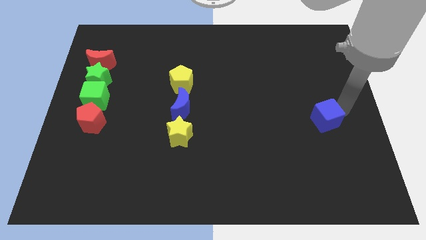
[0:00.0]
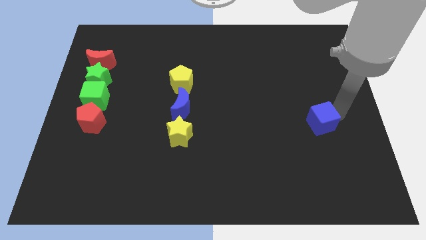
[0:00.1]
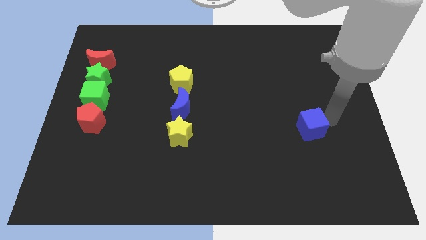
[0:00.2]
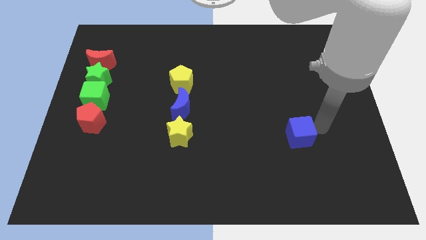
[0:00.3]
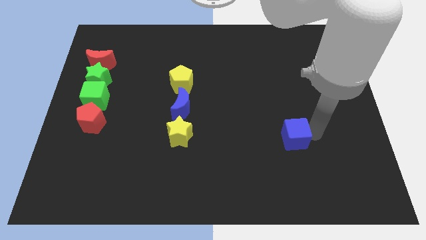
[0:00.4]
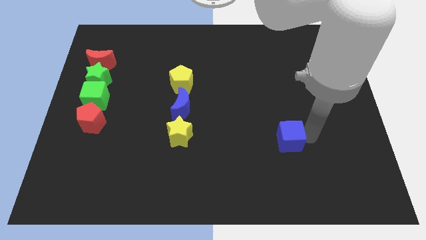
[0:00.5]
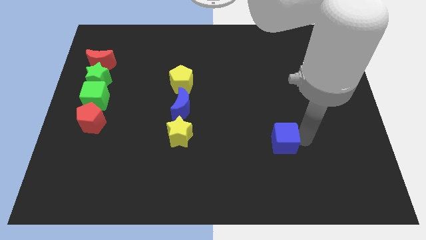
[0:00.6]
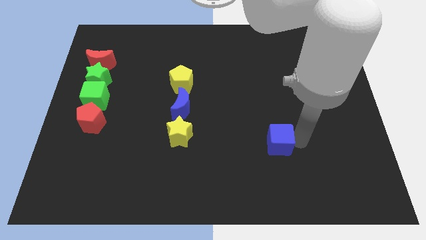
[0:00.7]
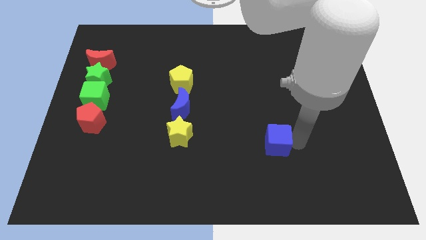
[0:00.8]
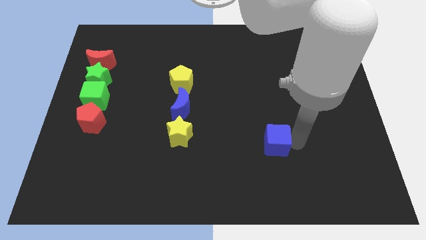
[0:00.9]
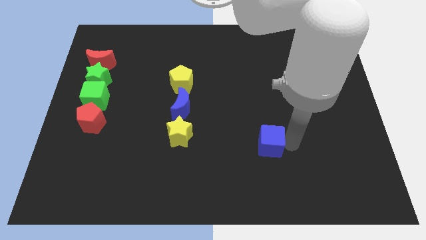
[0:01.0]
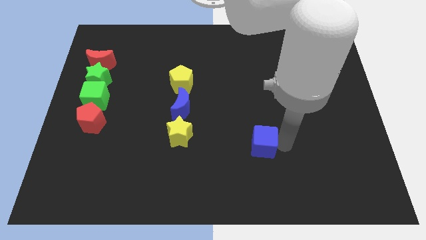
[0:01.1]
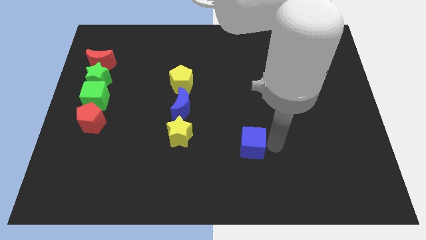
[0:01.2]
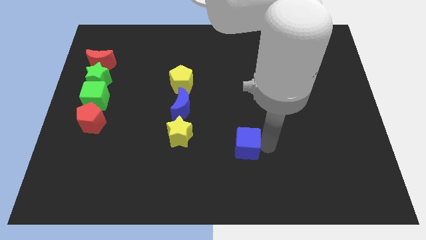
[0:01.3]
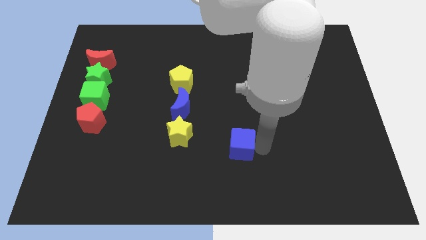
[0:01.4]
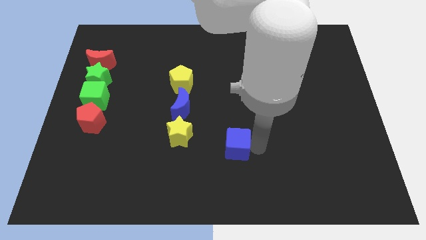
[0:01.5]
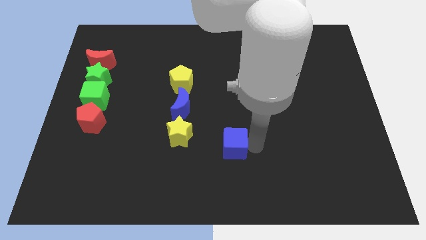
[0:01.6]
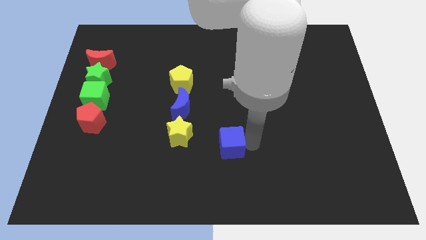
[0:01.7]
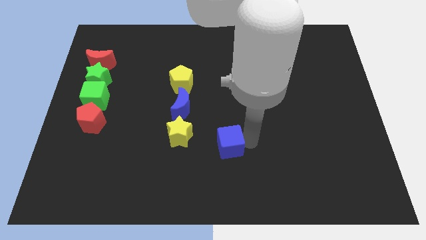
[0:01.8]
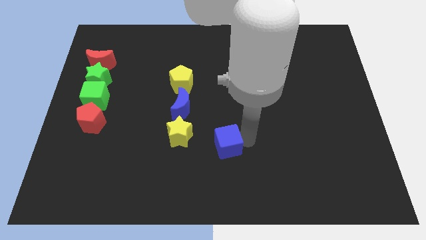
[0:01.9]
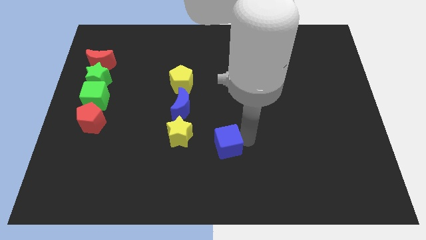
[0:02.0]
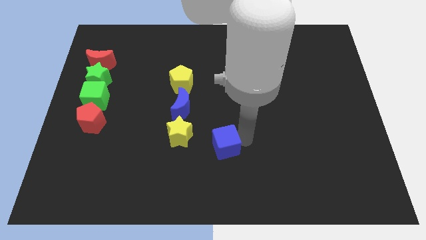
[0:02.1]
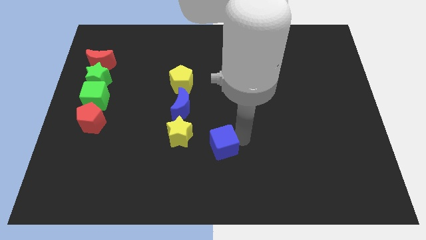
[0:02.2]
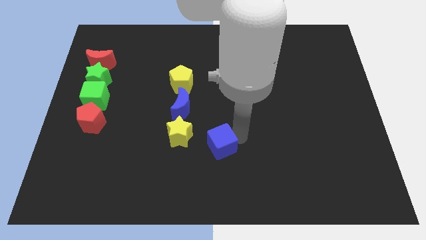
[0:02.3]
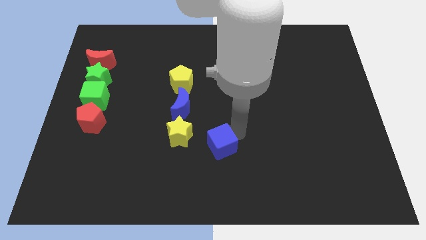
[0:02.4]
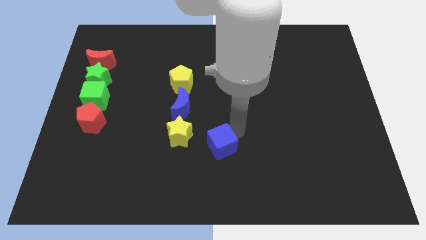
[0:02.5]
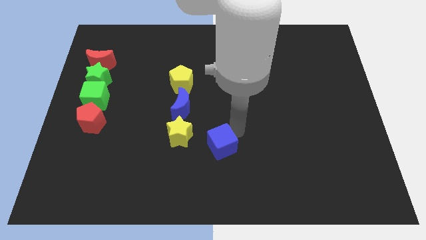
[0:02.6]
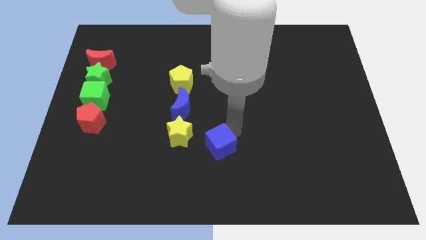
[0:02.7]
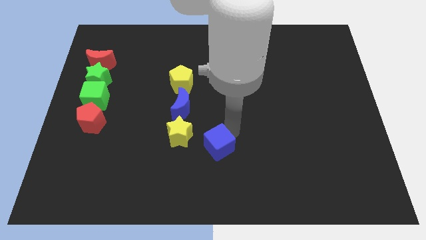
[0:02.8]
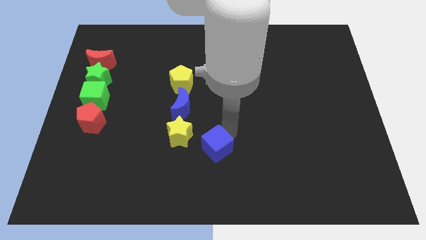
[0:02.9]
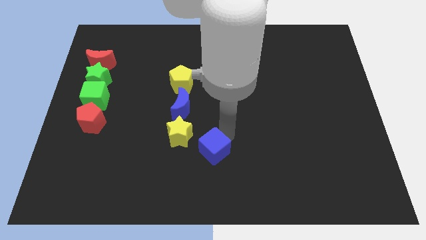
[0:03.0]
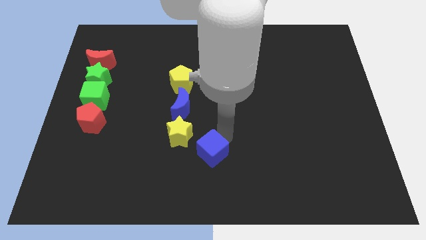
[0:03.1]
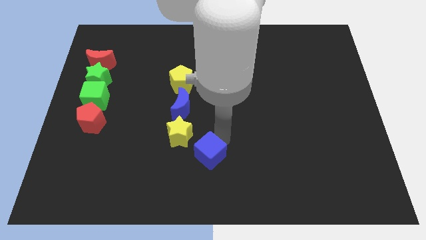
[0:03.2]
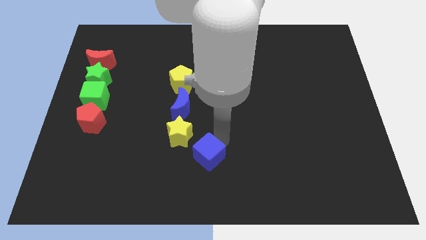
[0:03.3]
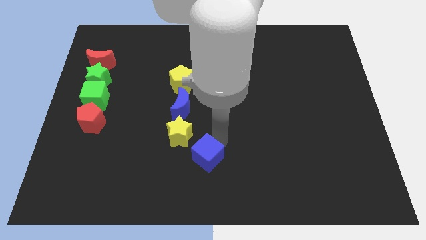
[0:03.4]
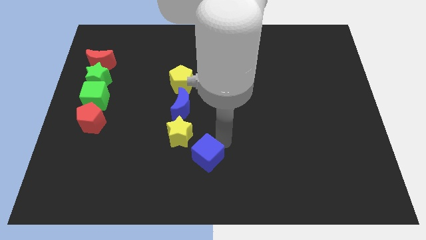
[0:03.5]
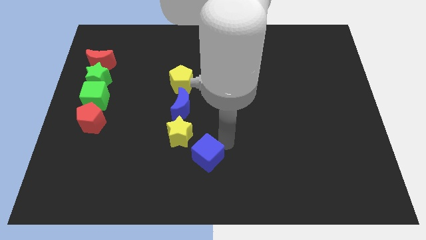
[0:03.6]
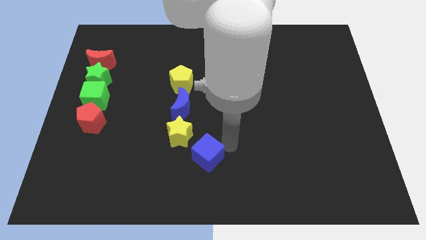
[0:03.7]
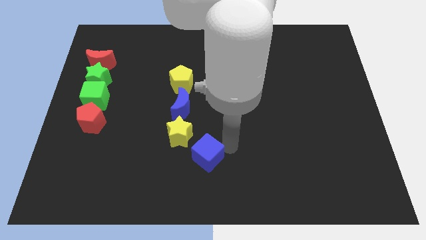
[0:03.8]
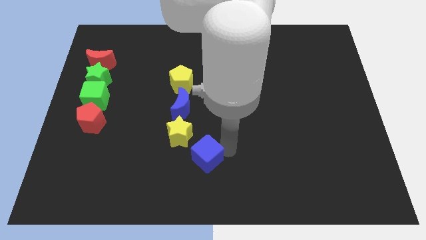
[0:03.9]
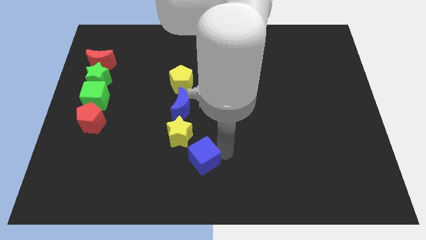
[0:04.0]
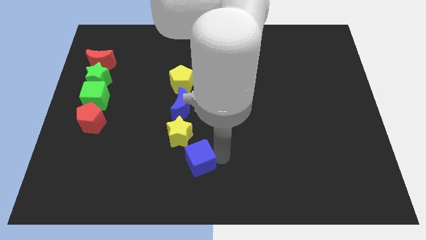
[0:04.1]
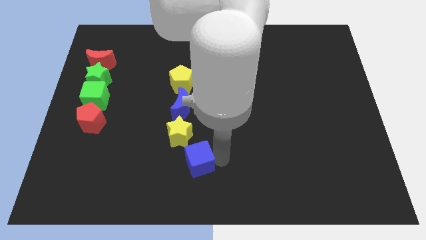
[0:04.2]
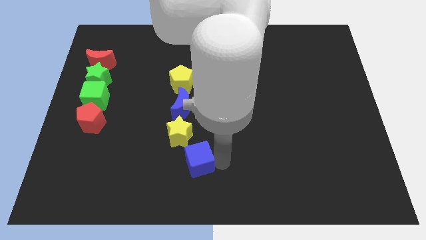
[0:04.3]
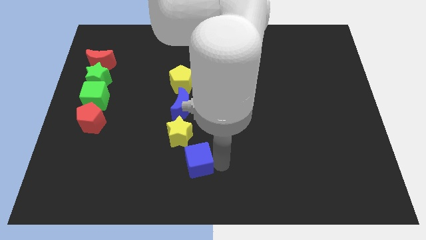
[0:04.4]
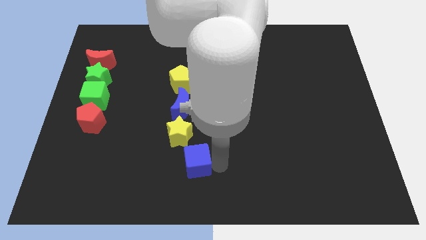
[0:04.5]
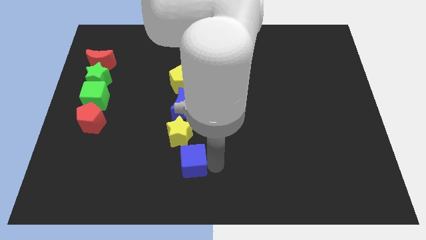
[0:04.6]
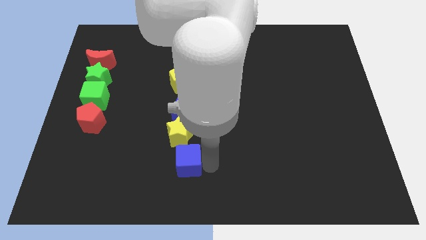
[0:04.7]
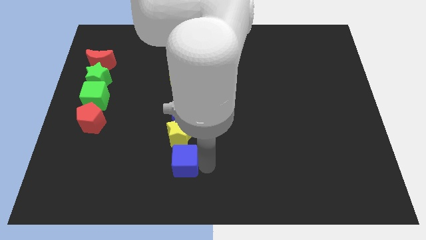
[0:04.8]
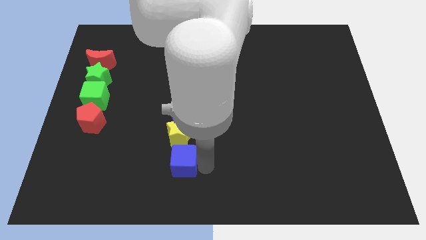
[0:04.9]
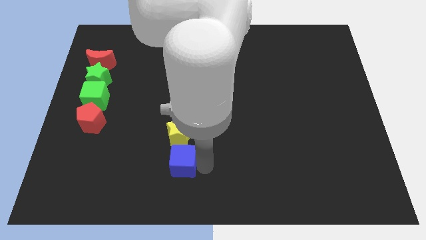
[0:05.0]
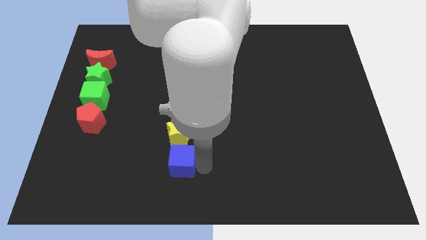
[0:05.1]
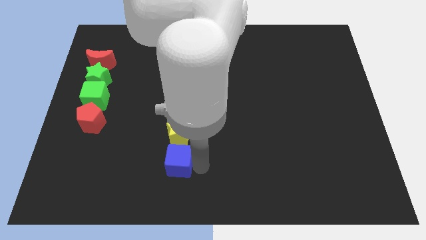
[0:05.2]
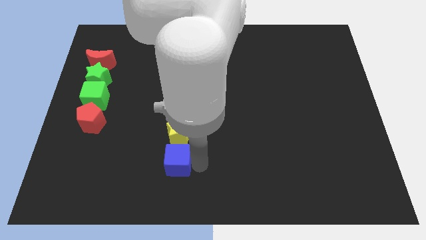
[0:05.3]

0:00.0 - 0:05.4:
place blue cube below yellow star

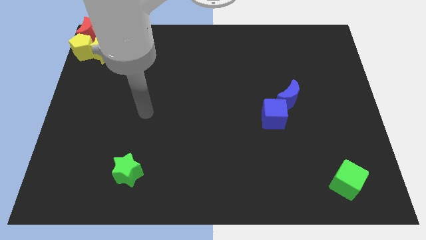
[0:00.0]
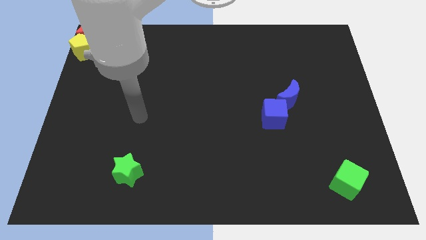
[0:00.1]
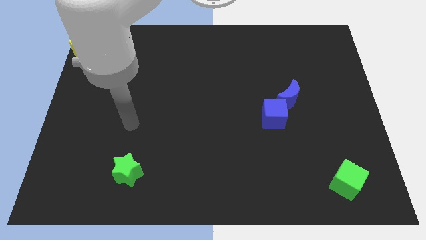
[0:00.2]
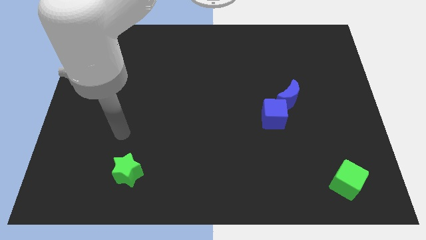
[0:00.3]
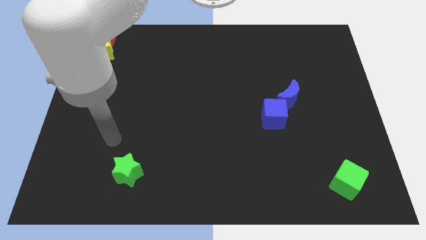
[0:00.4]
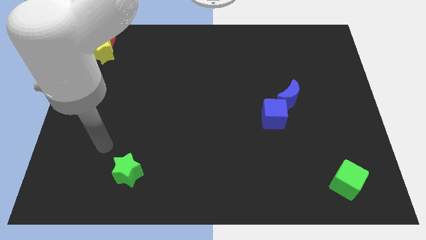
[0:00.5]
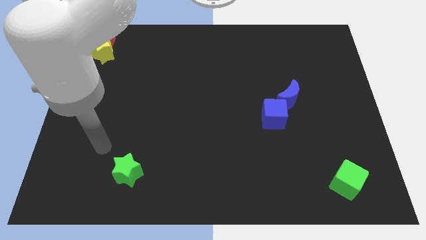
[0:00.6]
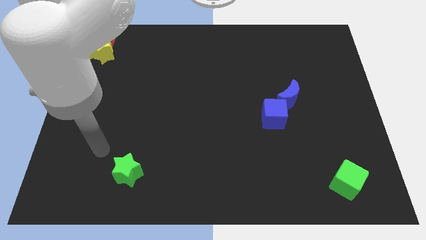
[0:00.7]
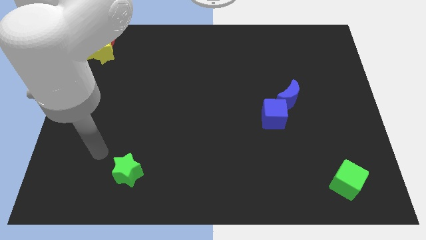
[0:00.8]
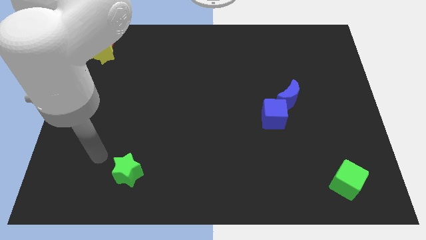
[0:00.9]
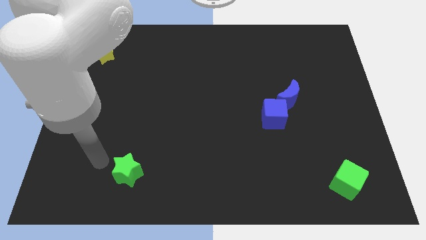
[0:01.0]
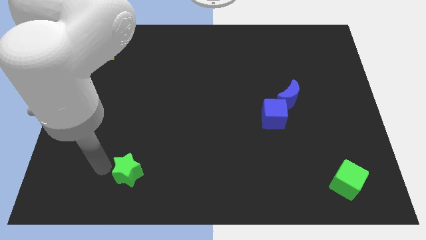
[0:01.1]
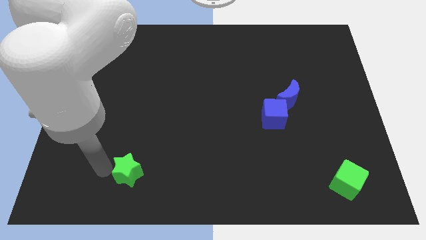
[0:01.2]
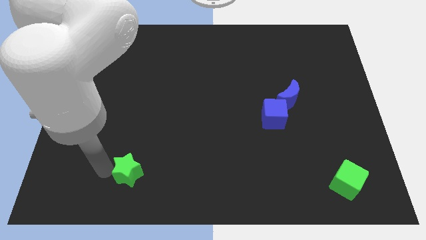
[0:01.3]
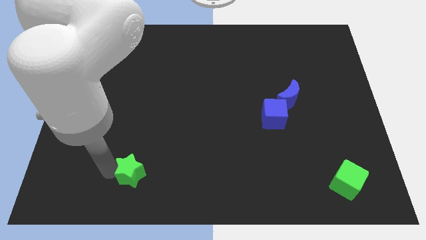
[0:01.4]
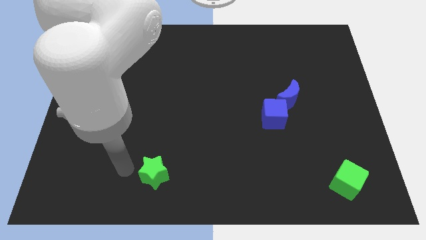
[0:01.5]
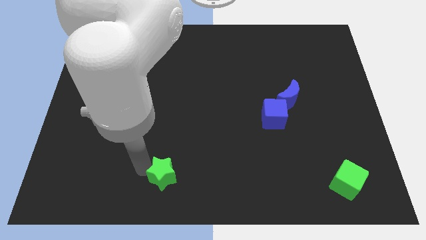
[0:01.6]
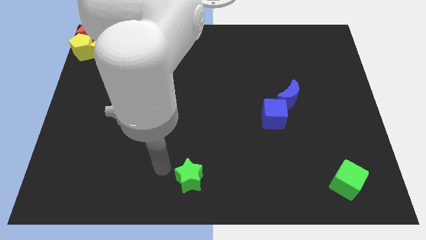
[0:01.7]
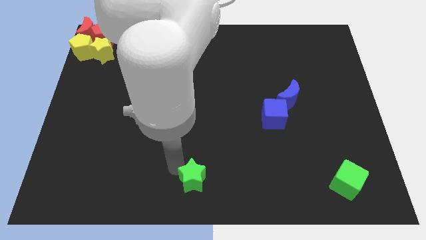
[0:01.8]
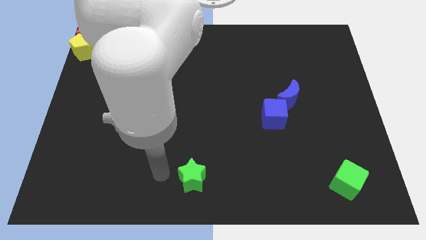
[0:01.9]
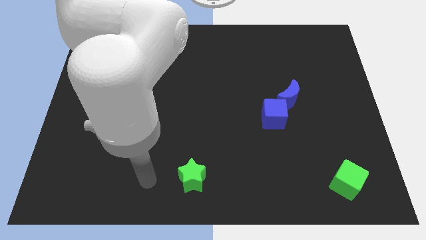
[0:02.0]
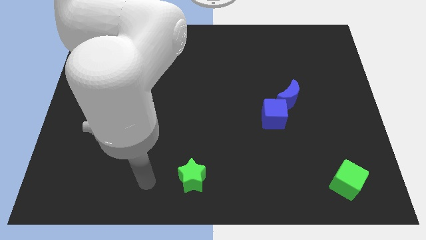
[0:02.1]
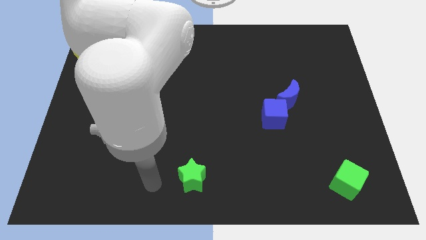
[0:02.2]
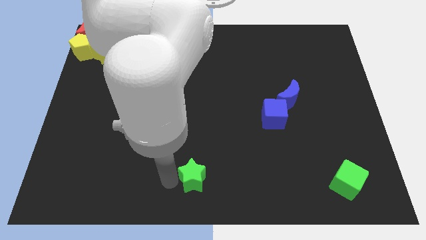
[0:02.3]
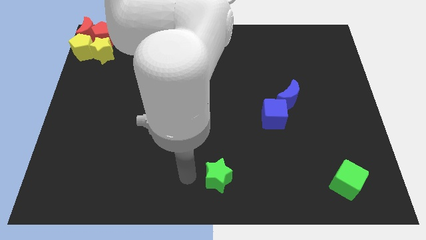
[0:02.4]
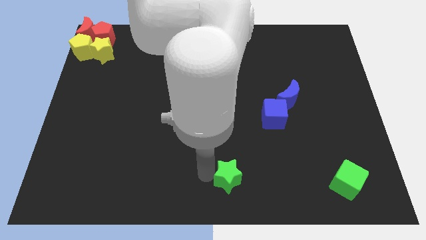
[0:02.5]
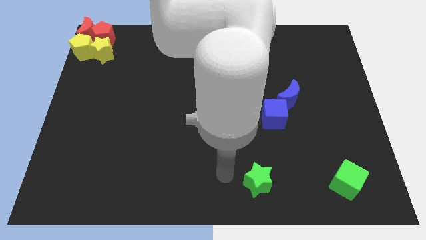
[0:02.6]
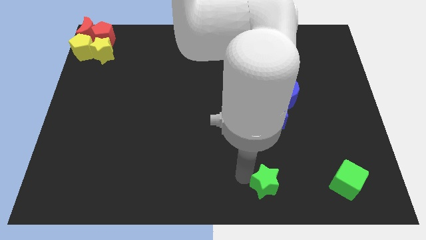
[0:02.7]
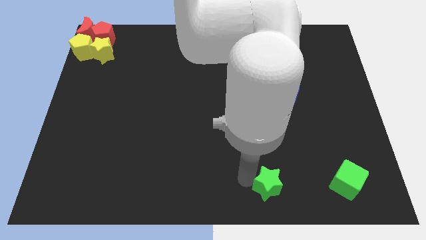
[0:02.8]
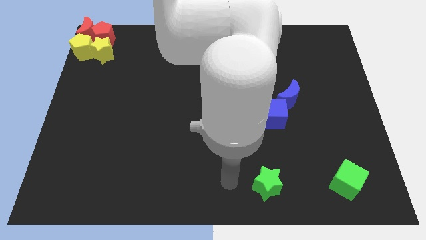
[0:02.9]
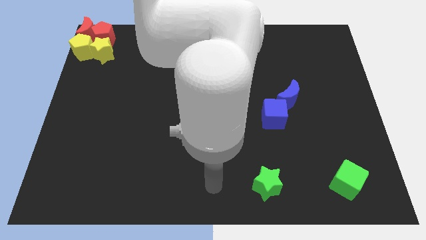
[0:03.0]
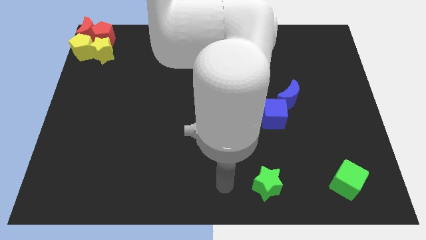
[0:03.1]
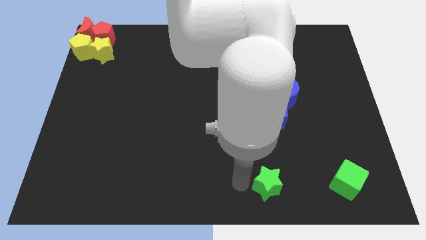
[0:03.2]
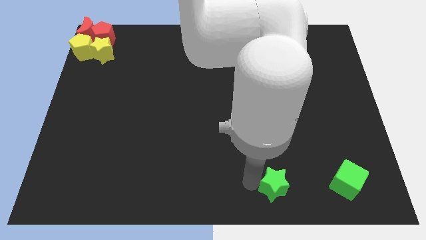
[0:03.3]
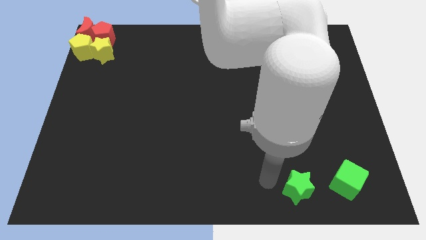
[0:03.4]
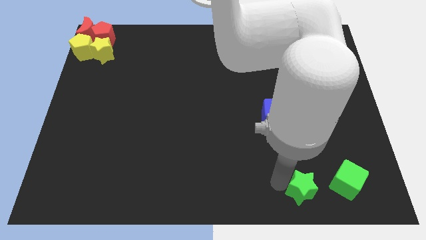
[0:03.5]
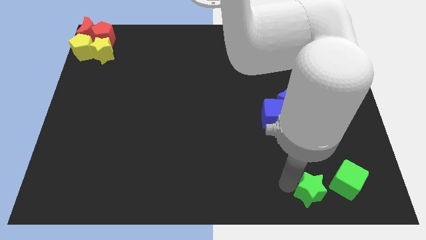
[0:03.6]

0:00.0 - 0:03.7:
put the green star parallel to the green cube
